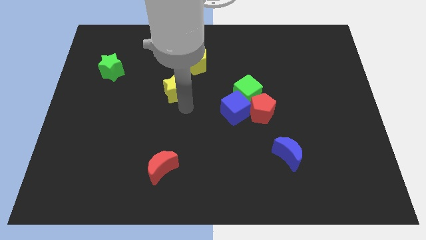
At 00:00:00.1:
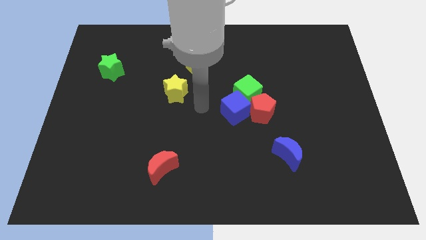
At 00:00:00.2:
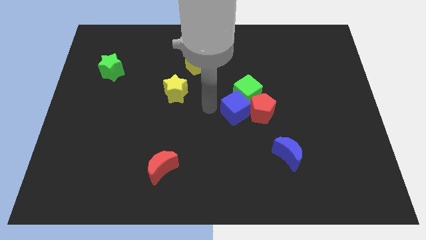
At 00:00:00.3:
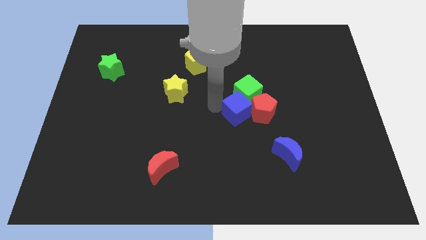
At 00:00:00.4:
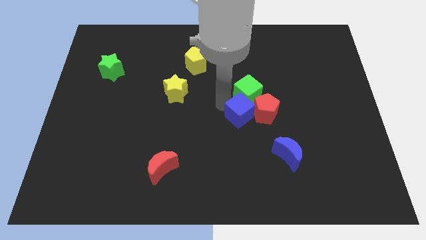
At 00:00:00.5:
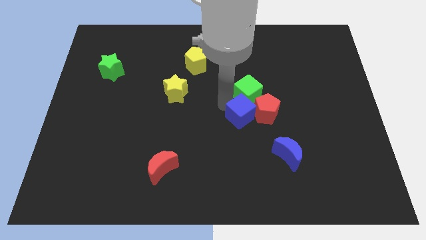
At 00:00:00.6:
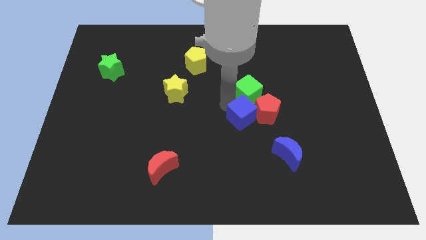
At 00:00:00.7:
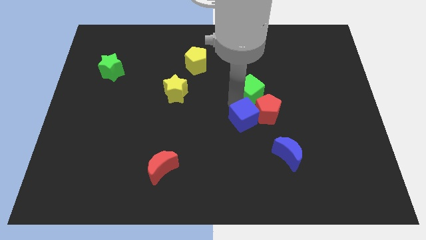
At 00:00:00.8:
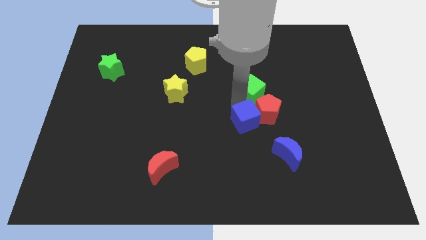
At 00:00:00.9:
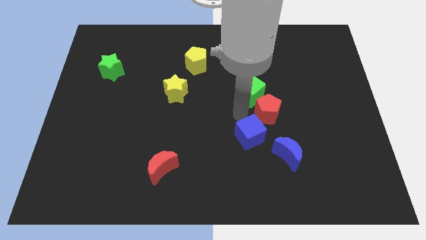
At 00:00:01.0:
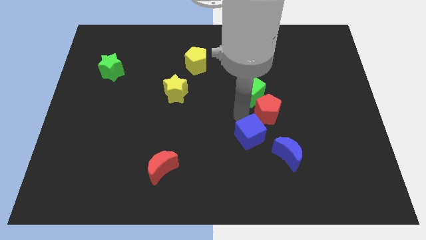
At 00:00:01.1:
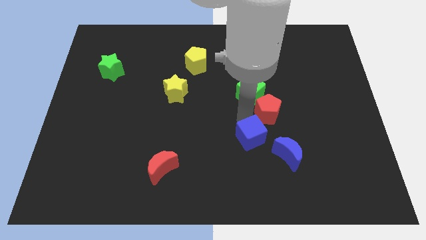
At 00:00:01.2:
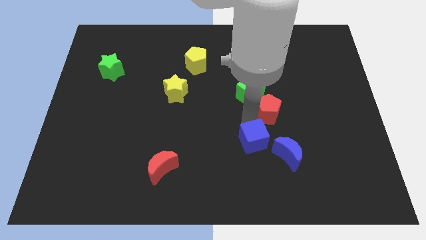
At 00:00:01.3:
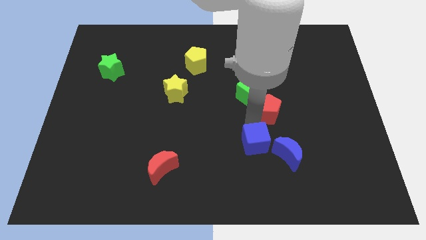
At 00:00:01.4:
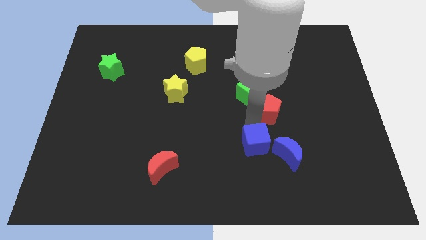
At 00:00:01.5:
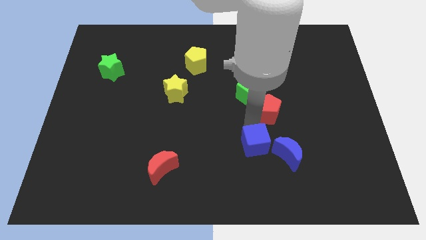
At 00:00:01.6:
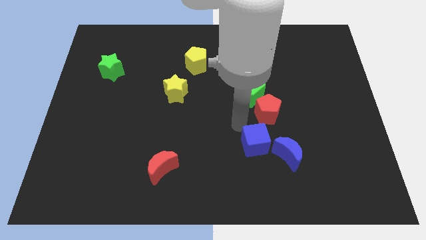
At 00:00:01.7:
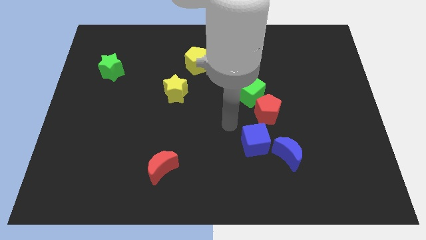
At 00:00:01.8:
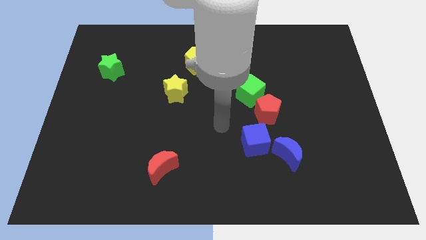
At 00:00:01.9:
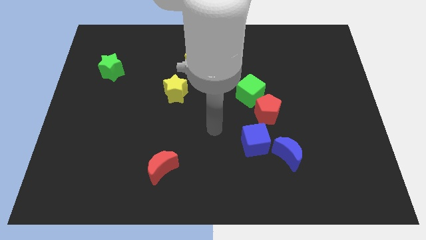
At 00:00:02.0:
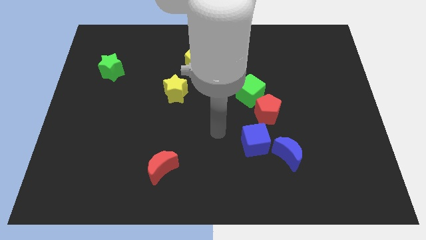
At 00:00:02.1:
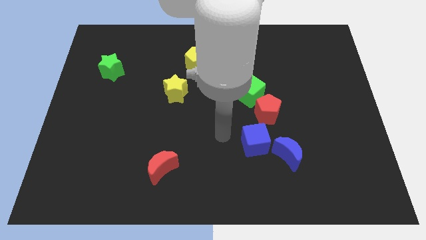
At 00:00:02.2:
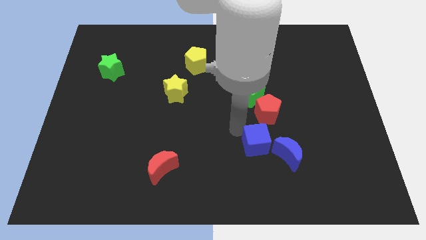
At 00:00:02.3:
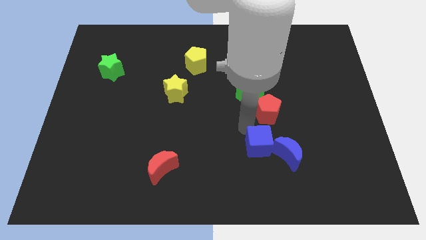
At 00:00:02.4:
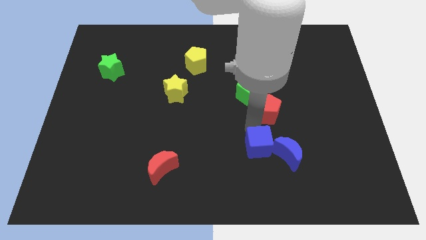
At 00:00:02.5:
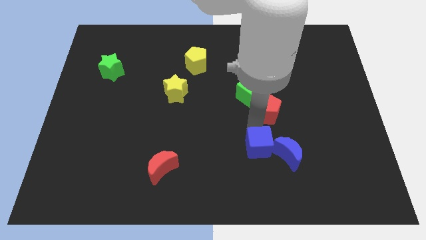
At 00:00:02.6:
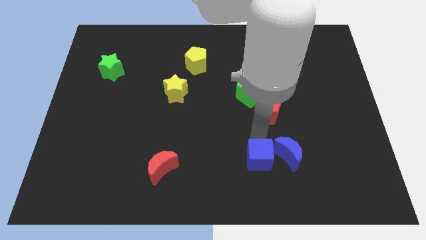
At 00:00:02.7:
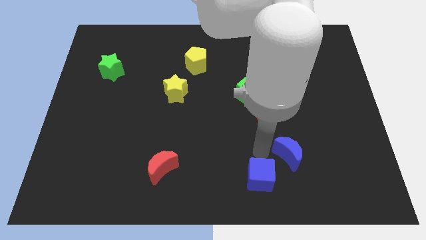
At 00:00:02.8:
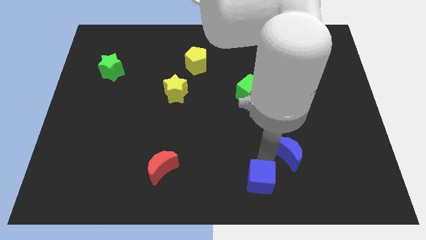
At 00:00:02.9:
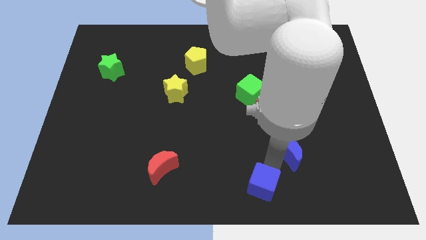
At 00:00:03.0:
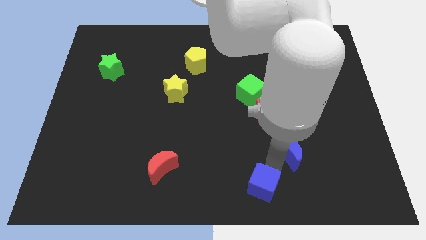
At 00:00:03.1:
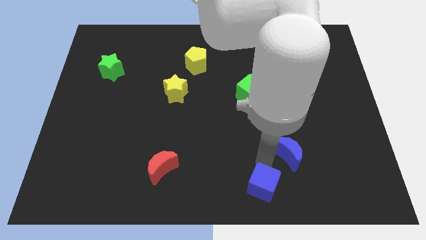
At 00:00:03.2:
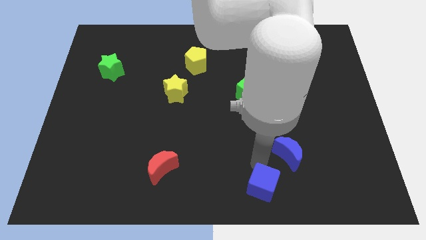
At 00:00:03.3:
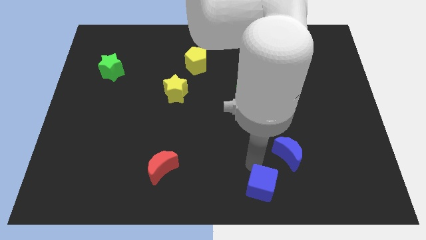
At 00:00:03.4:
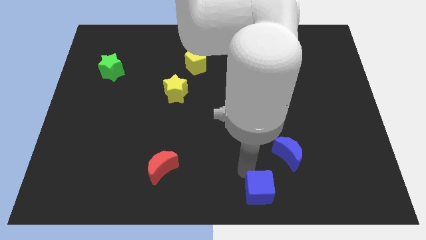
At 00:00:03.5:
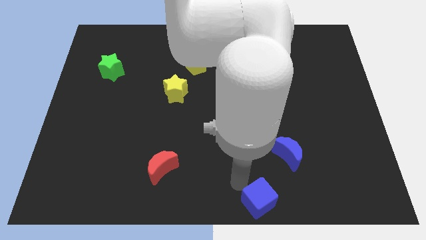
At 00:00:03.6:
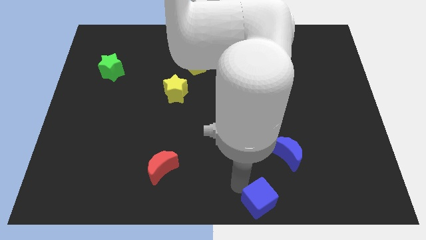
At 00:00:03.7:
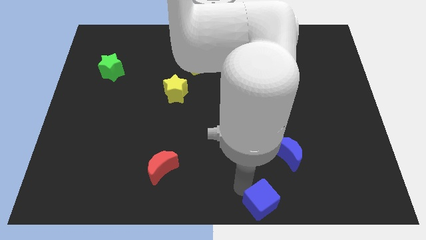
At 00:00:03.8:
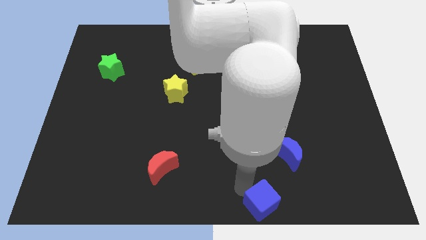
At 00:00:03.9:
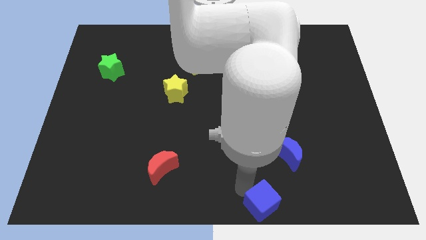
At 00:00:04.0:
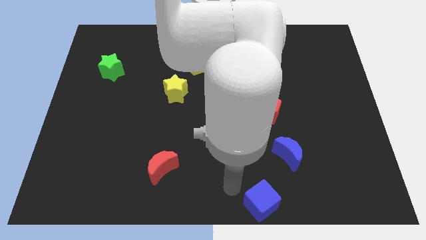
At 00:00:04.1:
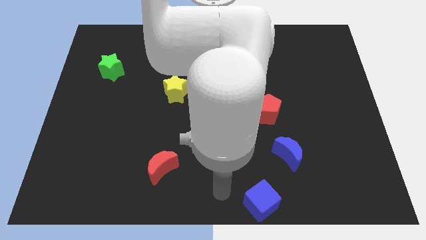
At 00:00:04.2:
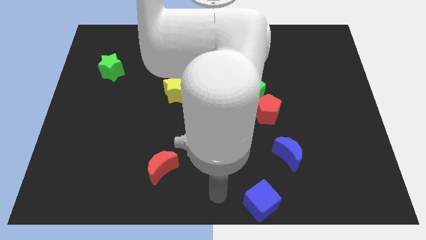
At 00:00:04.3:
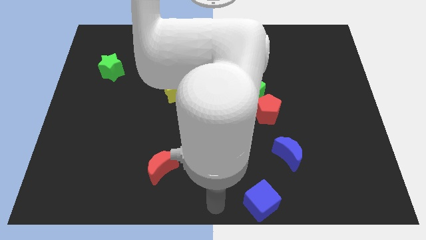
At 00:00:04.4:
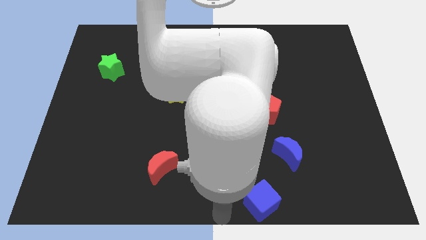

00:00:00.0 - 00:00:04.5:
push the blue cube to the bottom of the board

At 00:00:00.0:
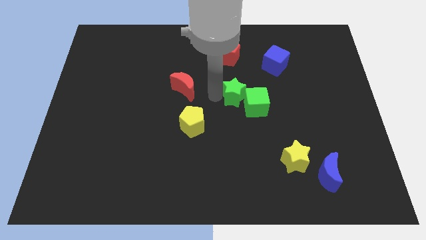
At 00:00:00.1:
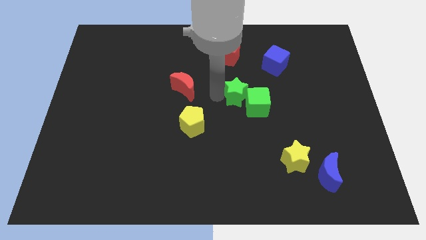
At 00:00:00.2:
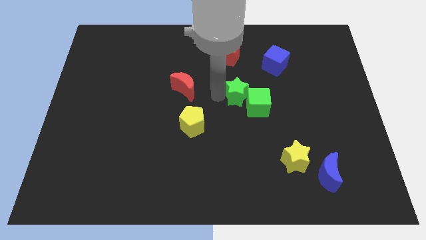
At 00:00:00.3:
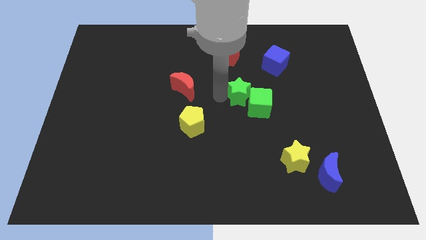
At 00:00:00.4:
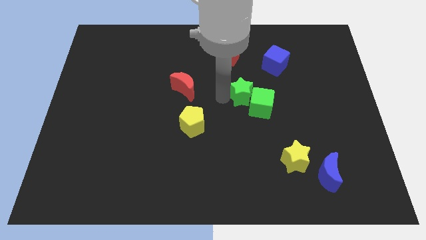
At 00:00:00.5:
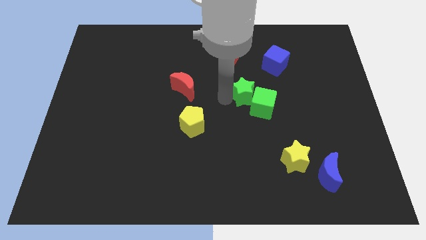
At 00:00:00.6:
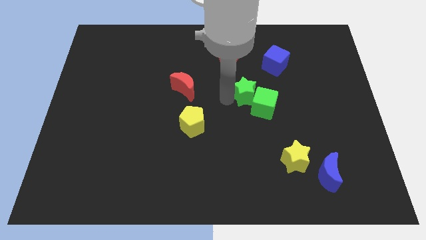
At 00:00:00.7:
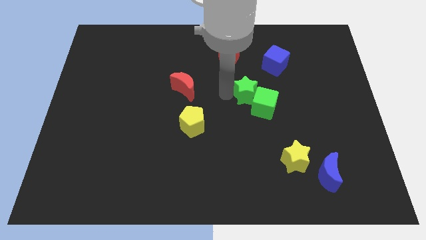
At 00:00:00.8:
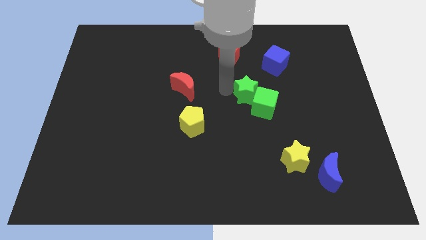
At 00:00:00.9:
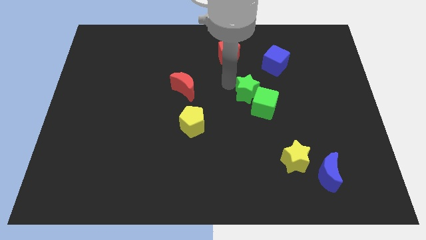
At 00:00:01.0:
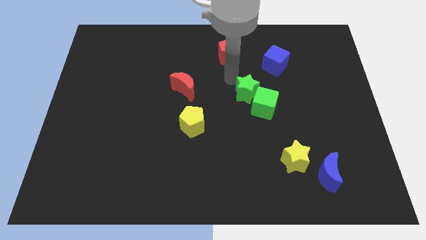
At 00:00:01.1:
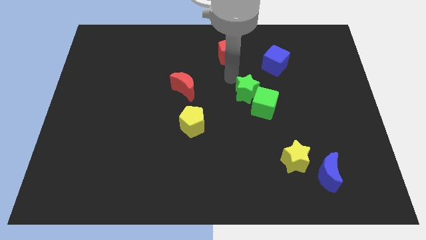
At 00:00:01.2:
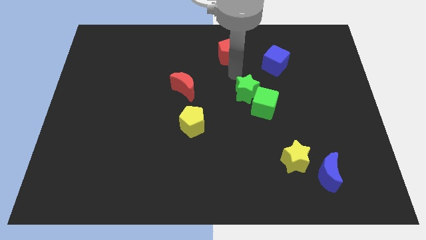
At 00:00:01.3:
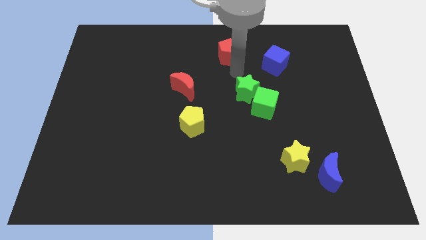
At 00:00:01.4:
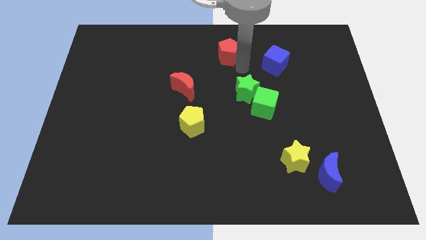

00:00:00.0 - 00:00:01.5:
move your arm away from the green star

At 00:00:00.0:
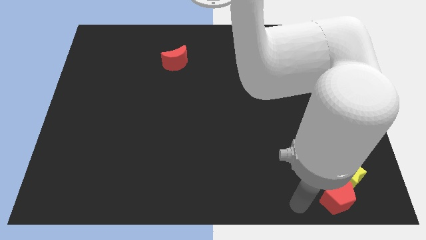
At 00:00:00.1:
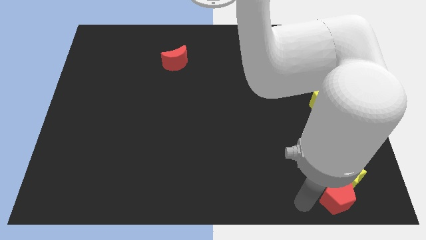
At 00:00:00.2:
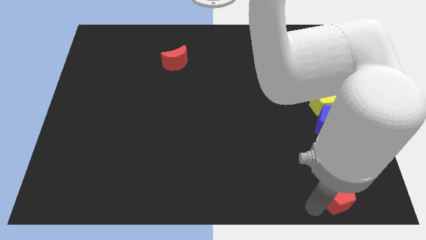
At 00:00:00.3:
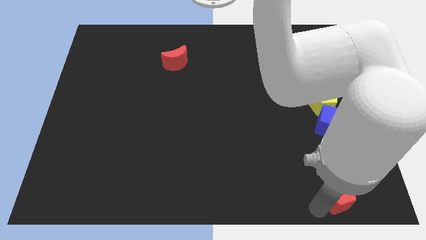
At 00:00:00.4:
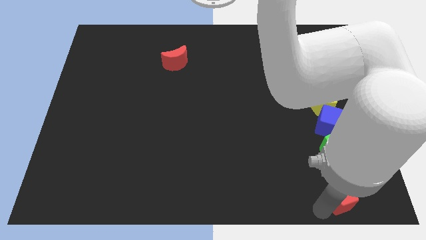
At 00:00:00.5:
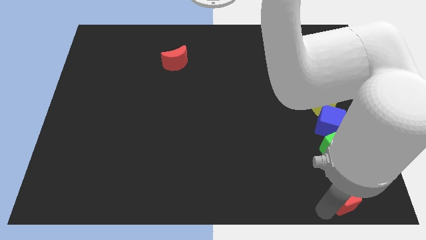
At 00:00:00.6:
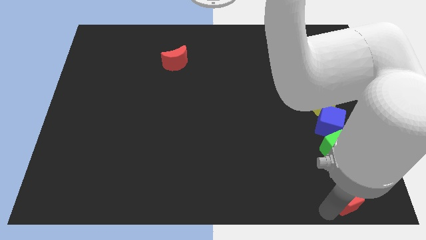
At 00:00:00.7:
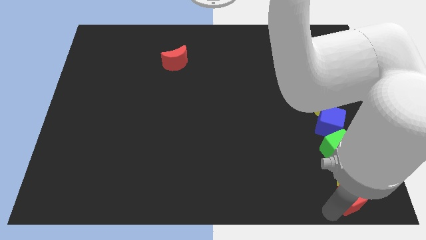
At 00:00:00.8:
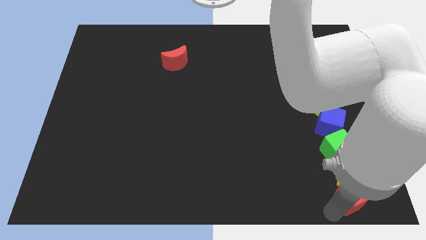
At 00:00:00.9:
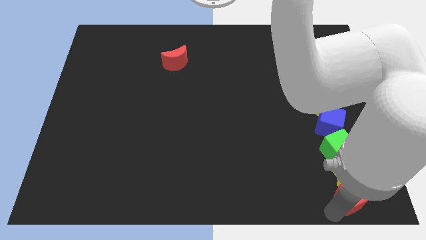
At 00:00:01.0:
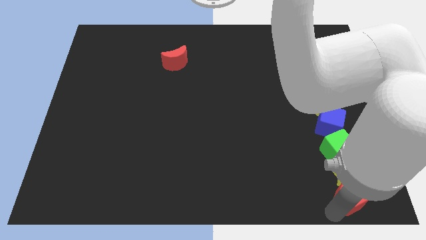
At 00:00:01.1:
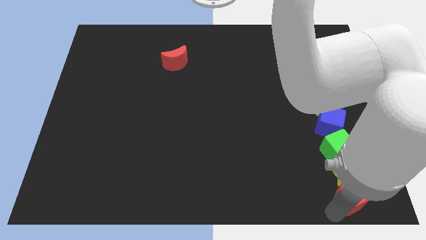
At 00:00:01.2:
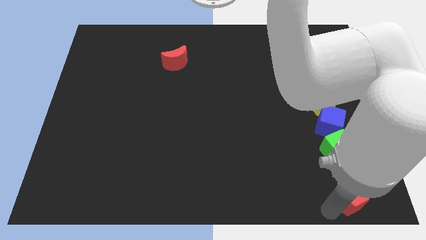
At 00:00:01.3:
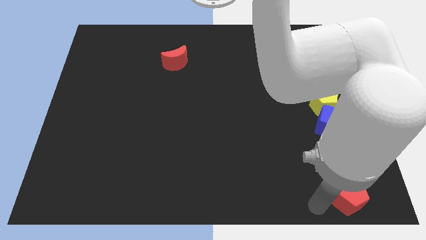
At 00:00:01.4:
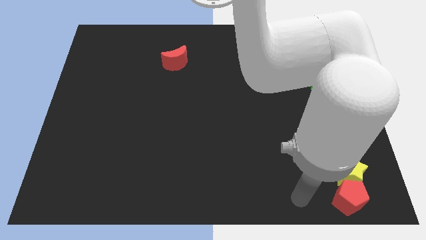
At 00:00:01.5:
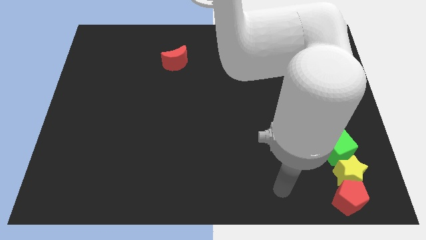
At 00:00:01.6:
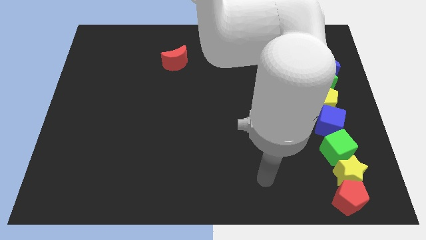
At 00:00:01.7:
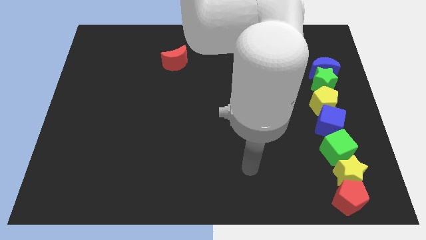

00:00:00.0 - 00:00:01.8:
slide the red pentagon to the bottom of the yellow star

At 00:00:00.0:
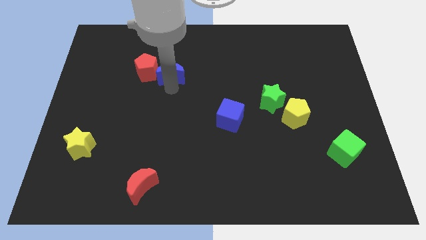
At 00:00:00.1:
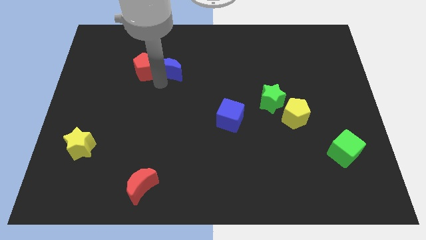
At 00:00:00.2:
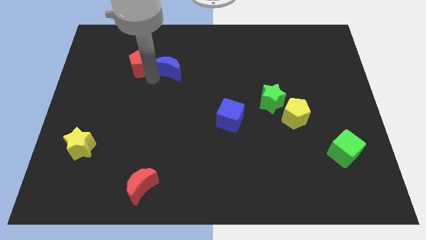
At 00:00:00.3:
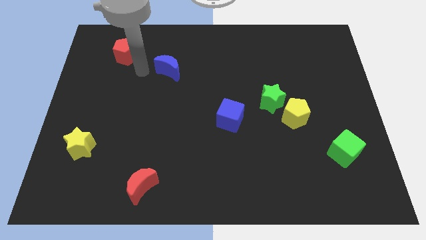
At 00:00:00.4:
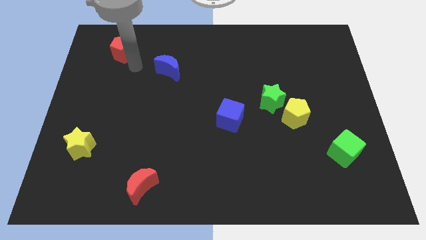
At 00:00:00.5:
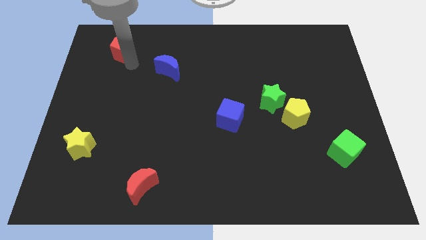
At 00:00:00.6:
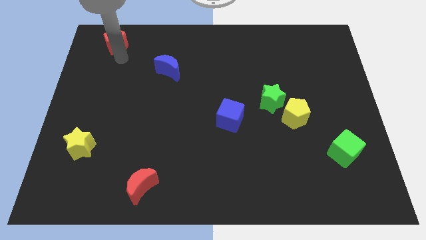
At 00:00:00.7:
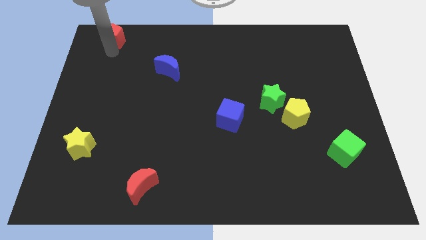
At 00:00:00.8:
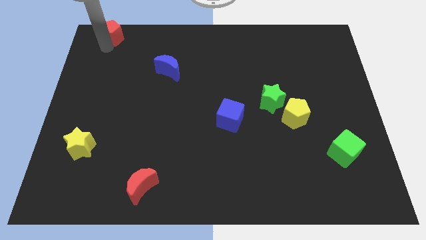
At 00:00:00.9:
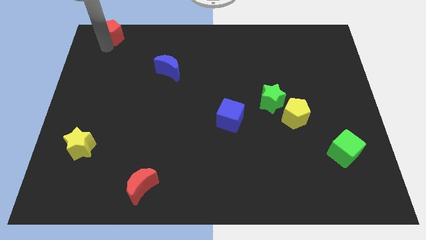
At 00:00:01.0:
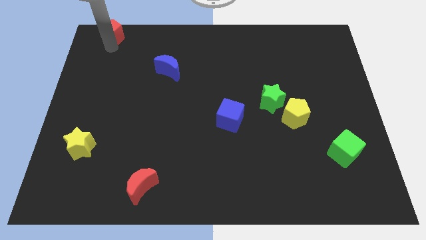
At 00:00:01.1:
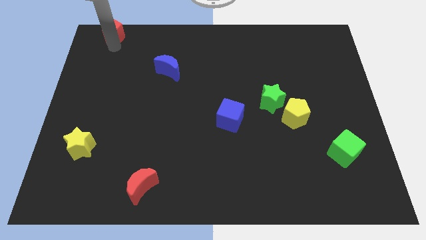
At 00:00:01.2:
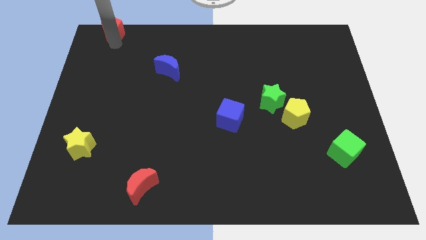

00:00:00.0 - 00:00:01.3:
separate the red pentagon from the blue moon
